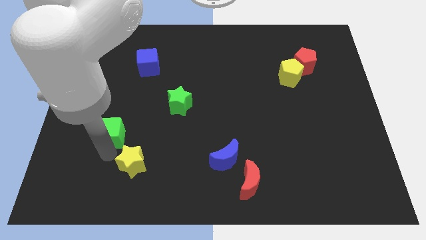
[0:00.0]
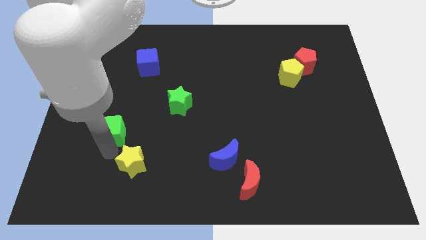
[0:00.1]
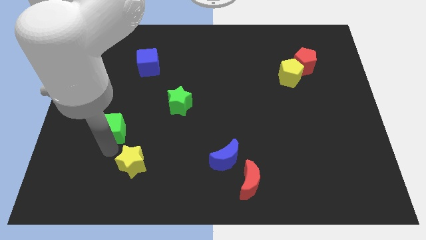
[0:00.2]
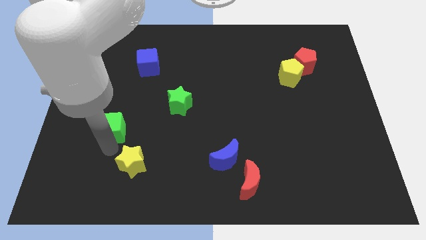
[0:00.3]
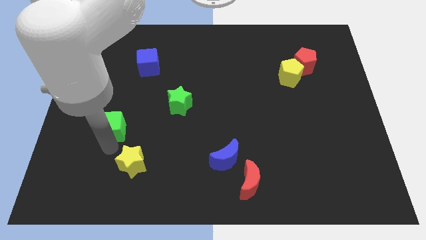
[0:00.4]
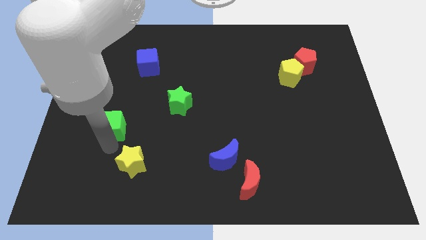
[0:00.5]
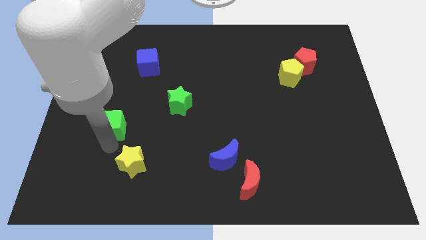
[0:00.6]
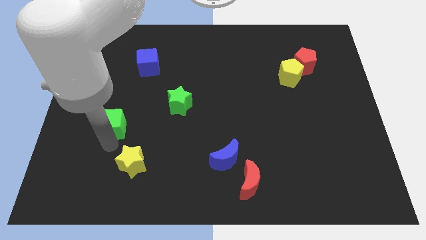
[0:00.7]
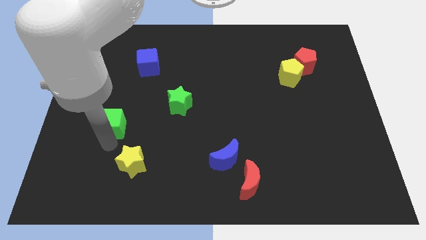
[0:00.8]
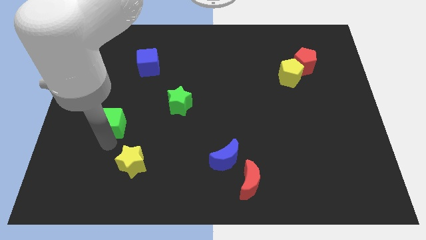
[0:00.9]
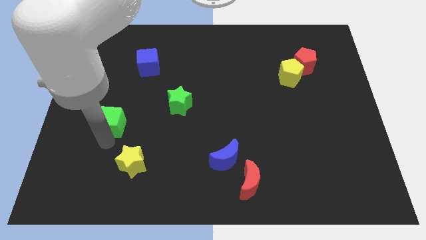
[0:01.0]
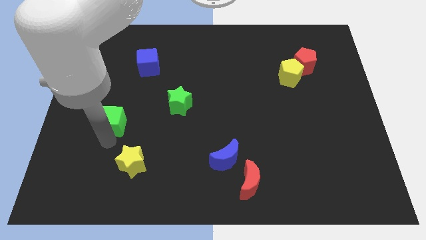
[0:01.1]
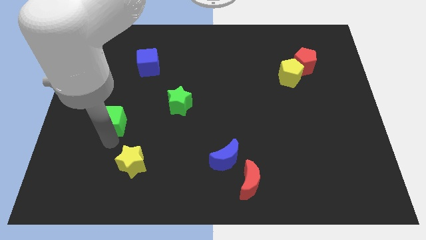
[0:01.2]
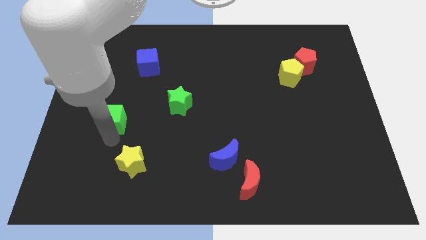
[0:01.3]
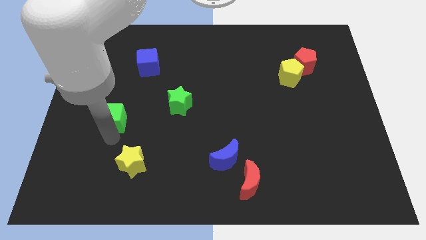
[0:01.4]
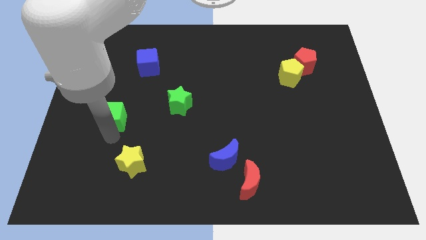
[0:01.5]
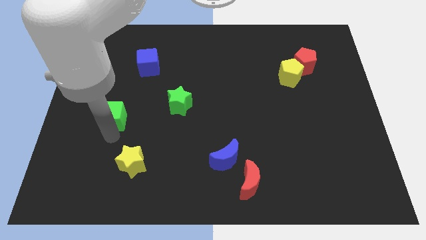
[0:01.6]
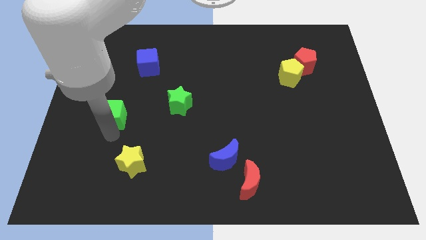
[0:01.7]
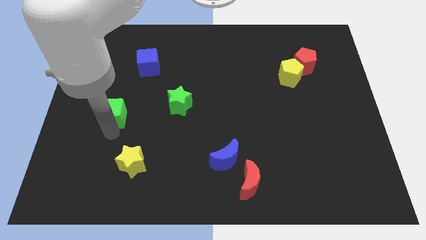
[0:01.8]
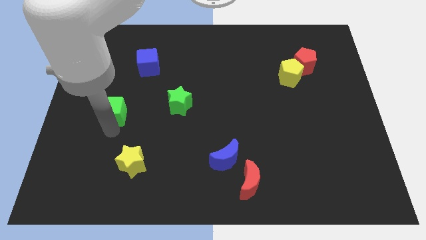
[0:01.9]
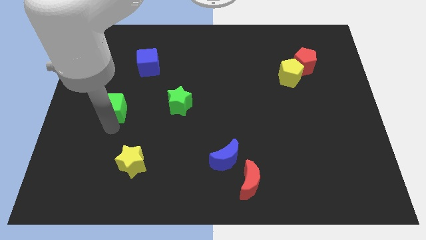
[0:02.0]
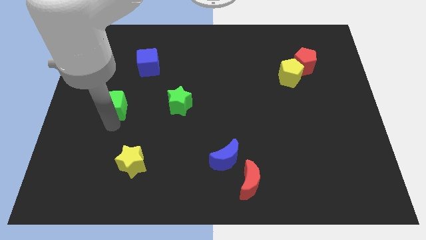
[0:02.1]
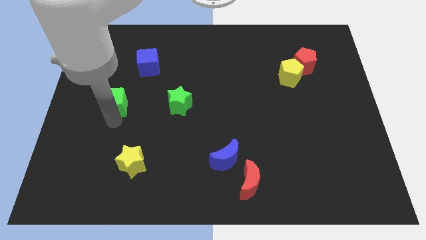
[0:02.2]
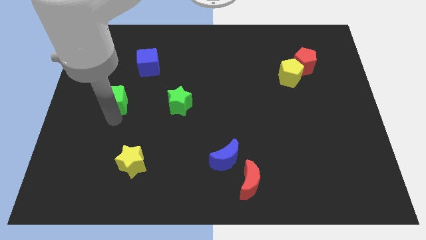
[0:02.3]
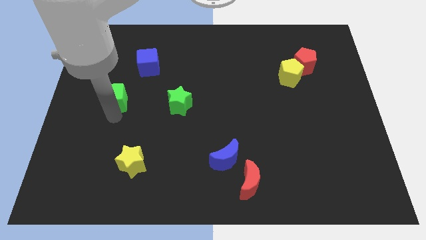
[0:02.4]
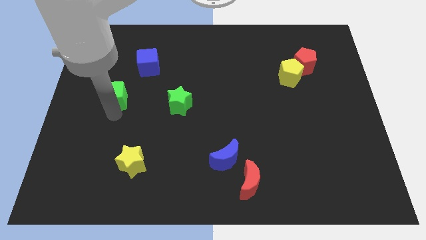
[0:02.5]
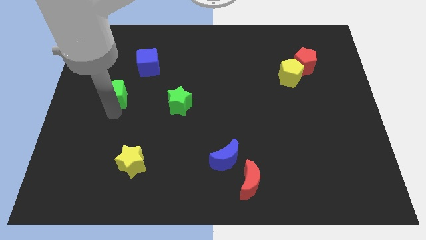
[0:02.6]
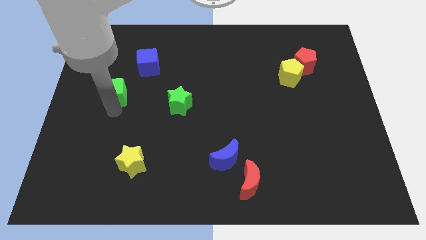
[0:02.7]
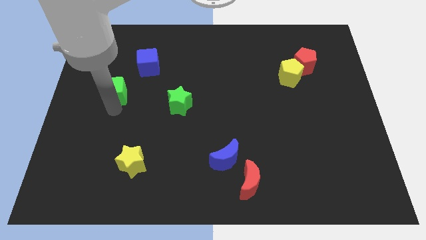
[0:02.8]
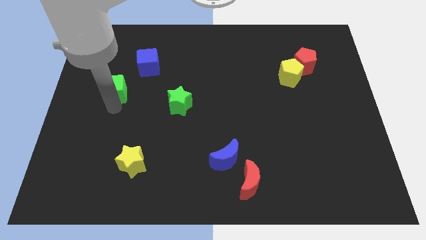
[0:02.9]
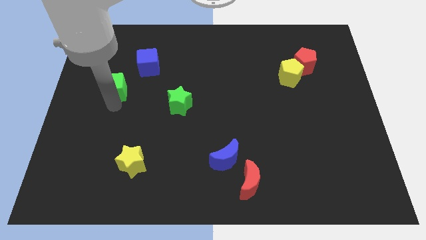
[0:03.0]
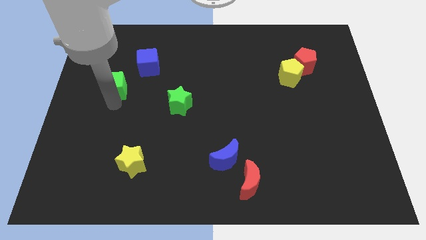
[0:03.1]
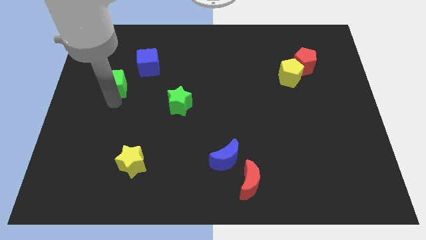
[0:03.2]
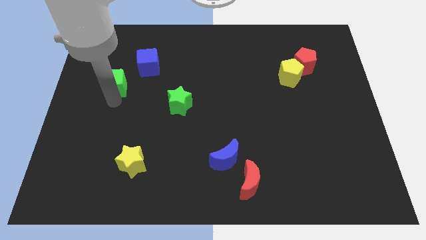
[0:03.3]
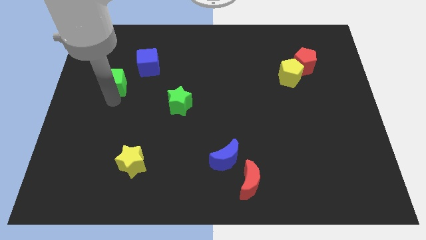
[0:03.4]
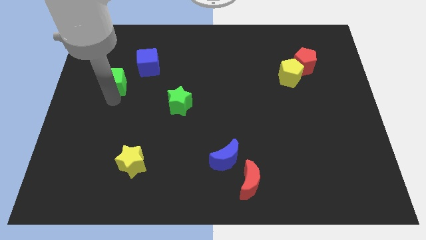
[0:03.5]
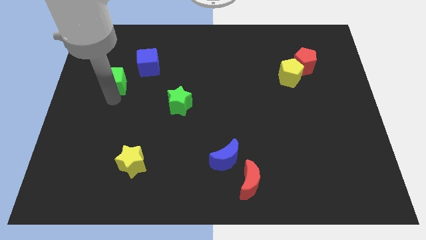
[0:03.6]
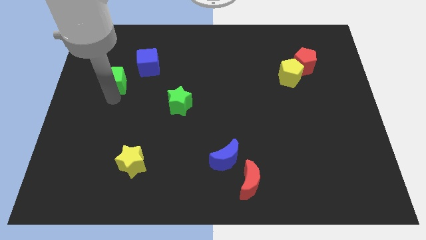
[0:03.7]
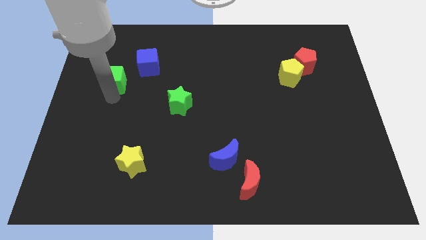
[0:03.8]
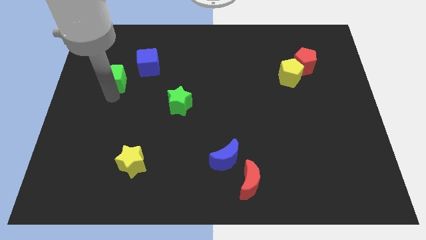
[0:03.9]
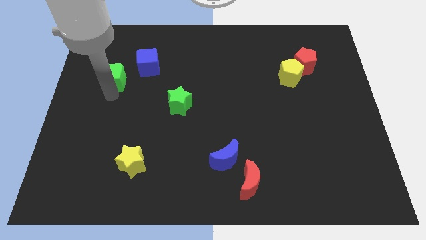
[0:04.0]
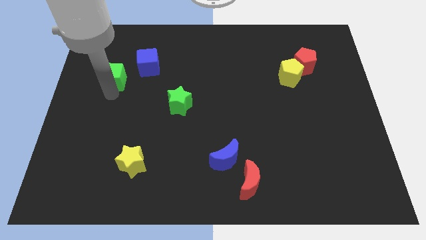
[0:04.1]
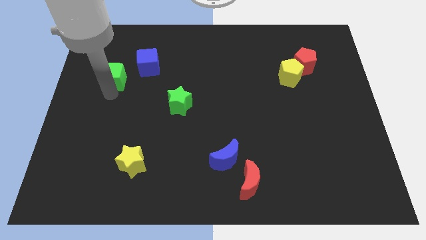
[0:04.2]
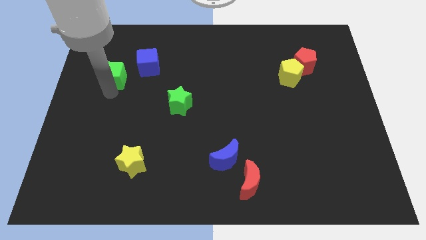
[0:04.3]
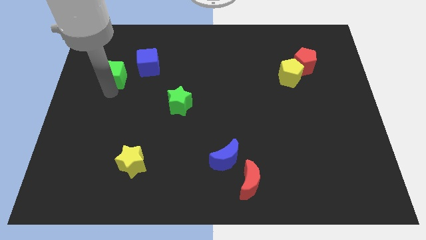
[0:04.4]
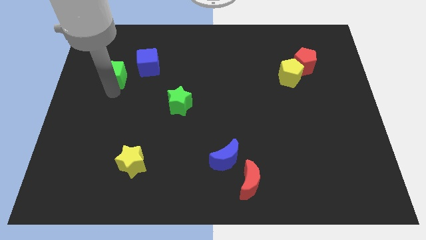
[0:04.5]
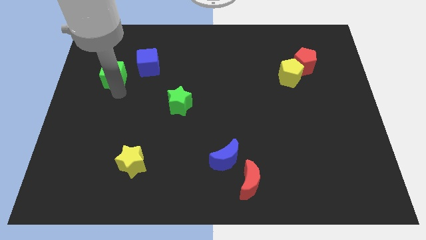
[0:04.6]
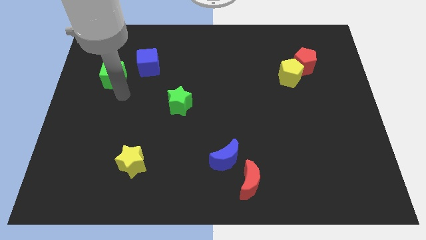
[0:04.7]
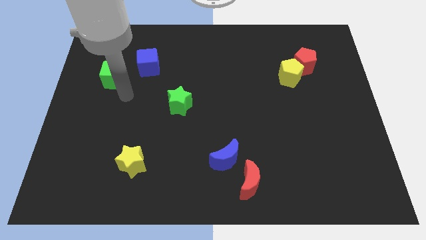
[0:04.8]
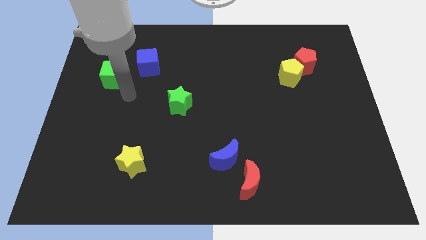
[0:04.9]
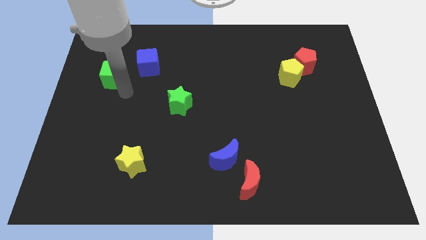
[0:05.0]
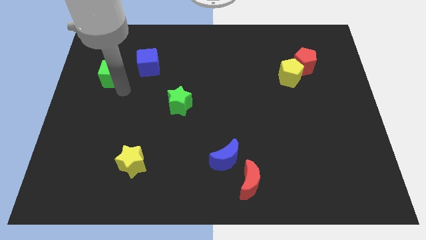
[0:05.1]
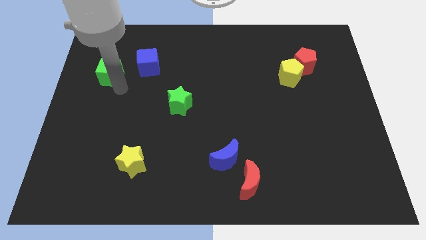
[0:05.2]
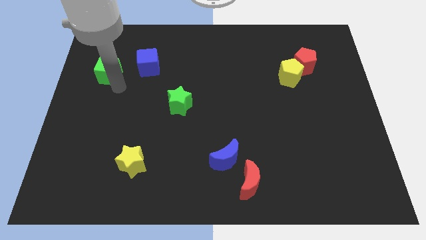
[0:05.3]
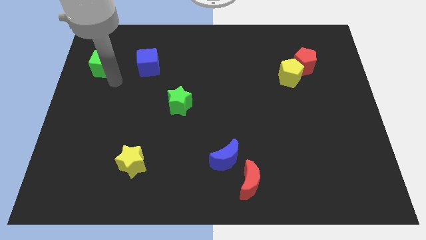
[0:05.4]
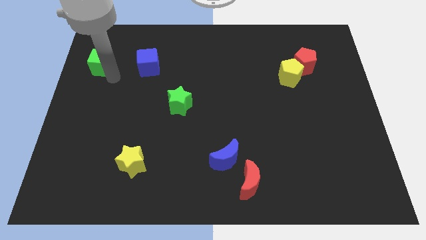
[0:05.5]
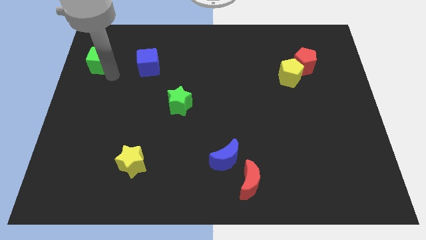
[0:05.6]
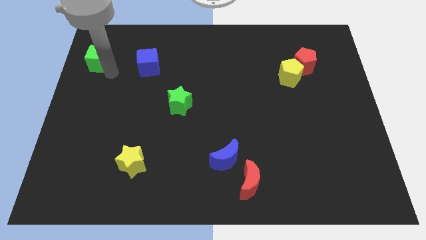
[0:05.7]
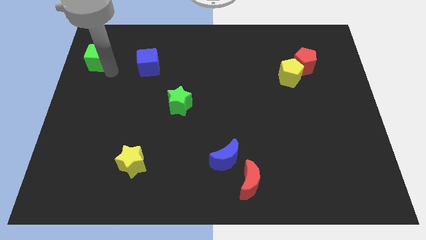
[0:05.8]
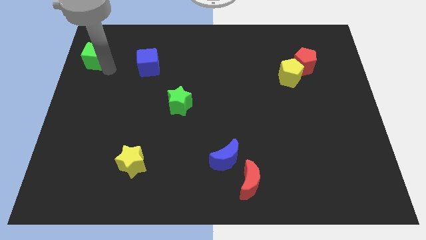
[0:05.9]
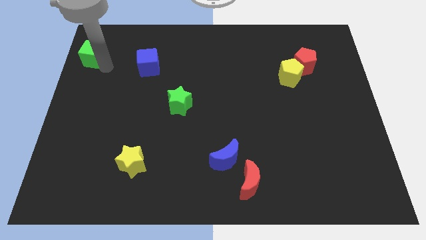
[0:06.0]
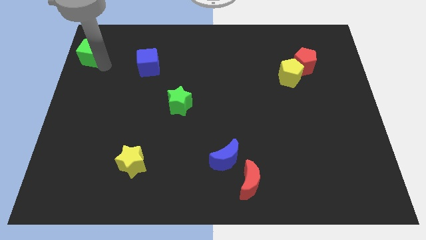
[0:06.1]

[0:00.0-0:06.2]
push the green cube upward

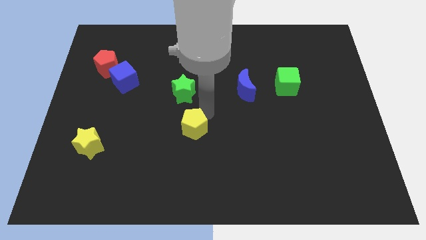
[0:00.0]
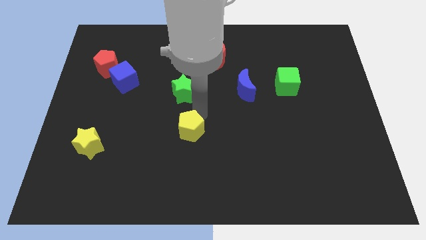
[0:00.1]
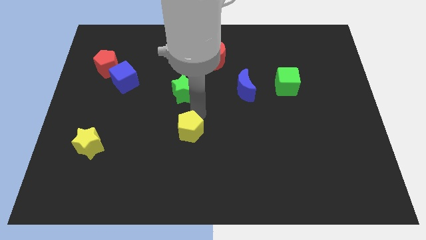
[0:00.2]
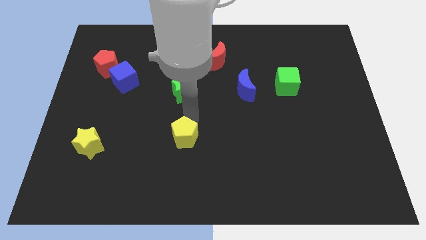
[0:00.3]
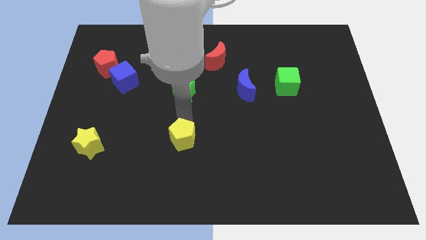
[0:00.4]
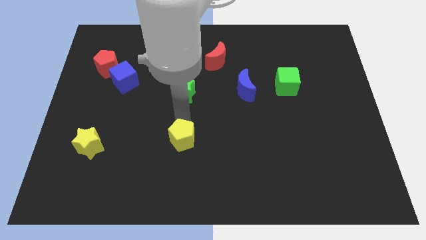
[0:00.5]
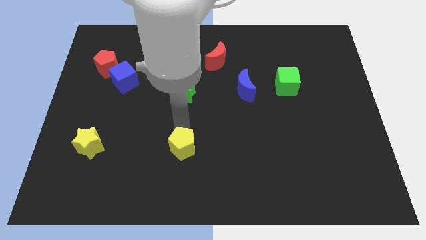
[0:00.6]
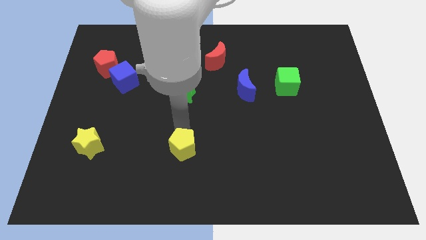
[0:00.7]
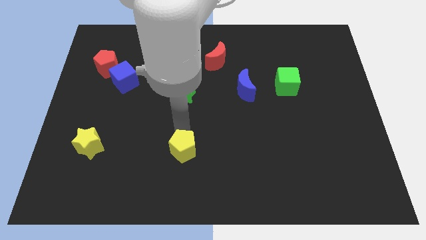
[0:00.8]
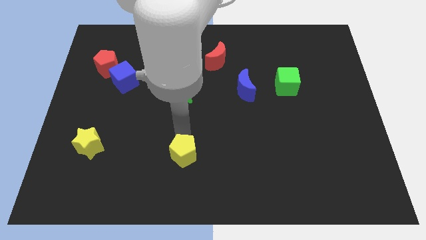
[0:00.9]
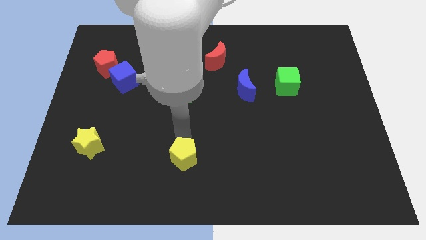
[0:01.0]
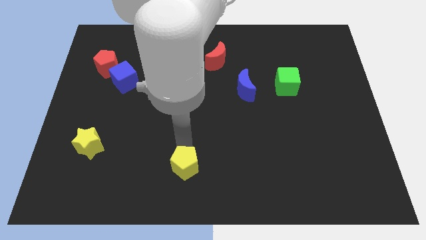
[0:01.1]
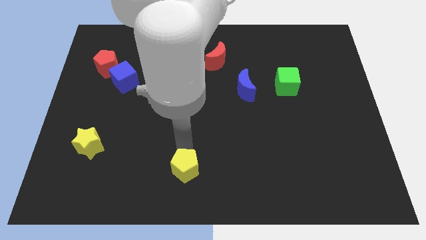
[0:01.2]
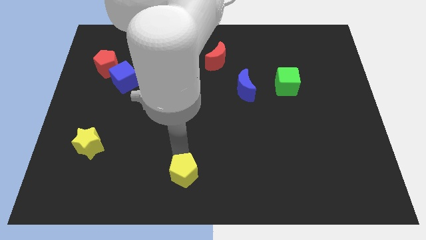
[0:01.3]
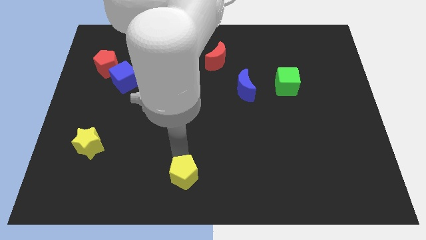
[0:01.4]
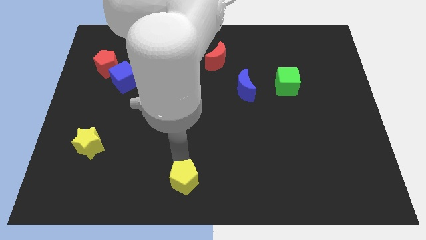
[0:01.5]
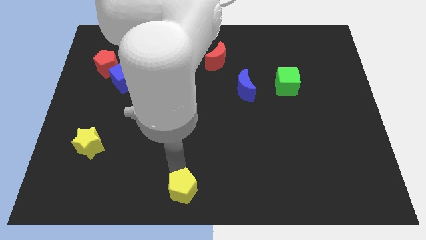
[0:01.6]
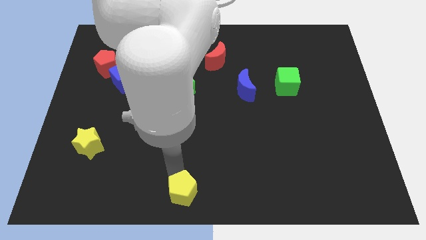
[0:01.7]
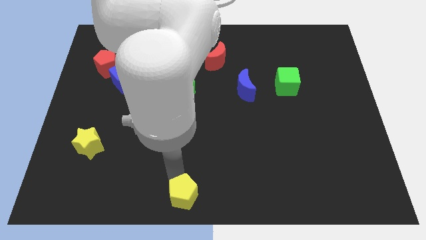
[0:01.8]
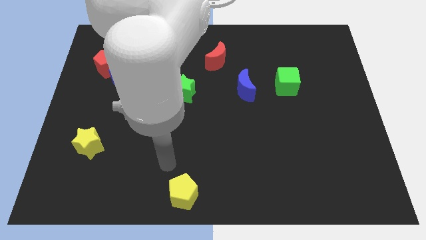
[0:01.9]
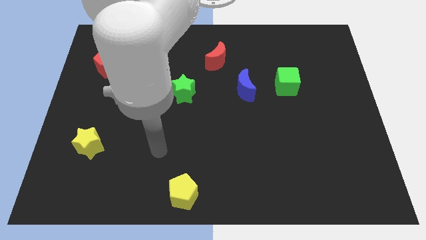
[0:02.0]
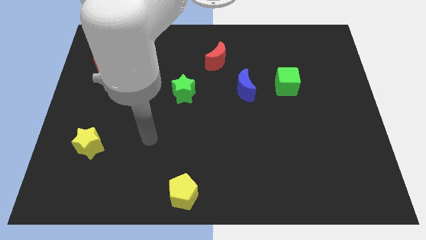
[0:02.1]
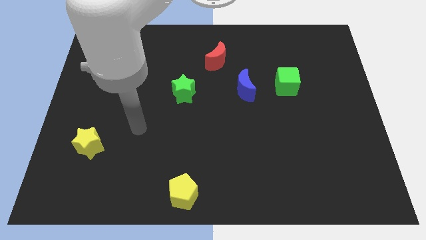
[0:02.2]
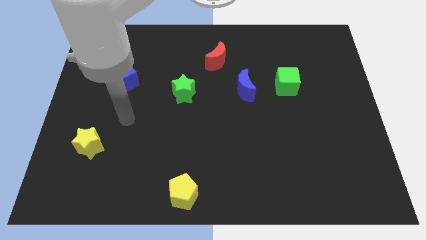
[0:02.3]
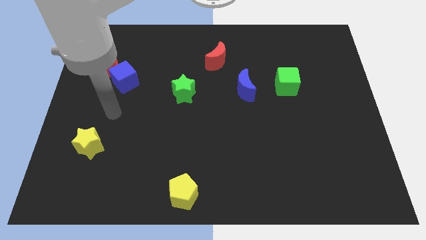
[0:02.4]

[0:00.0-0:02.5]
push the yellow pentagon to the bottom of the board

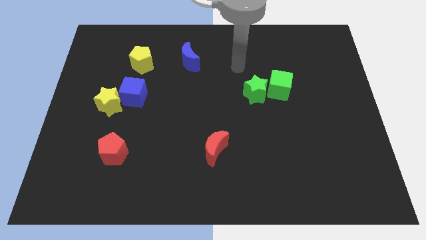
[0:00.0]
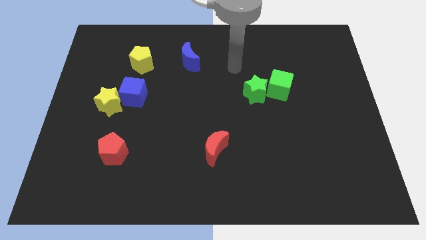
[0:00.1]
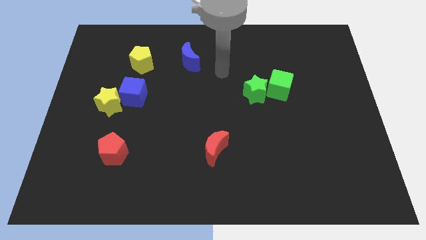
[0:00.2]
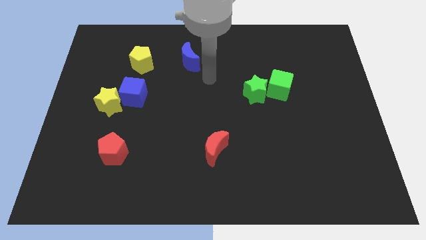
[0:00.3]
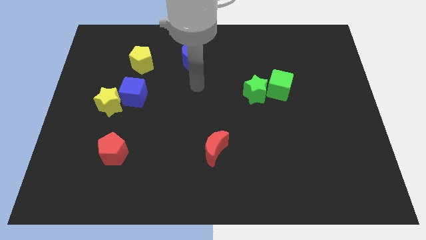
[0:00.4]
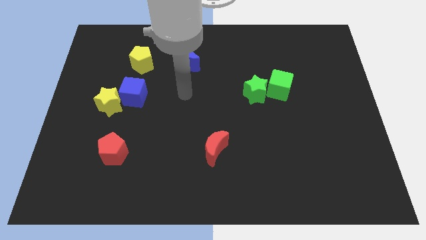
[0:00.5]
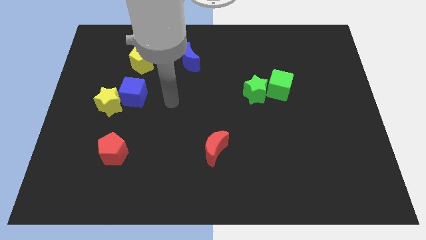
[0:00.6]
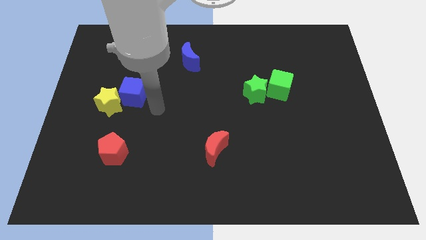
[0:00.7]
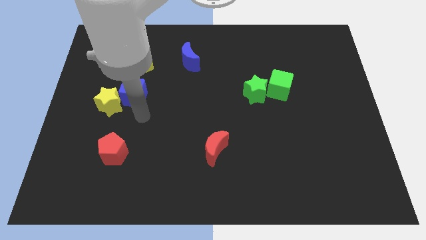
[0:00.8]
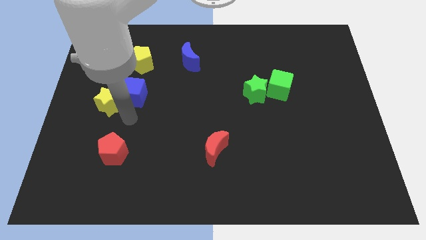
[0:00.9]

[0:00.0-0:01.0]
point your arm at the bottom side of the blue cube
